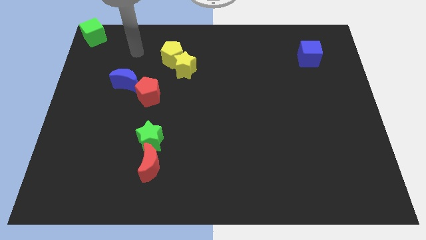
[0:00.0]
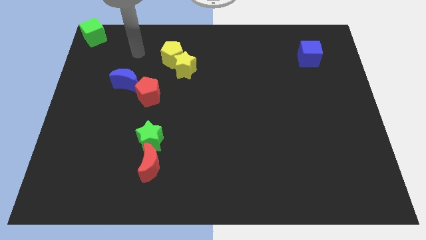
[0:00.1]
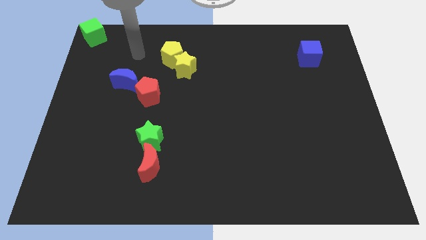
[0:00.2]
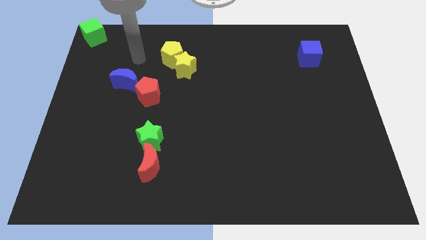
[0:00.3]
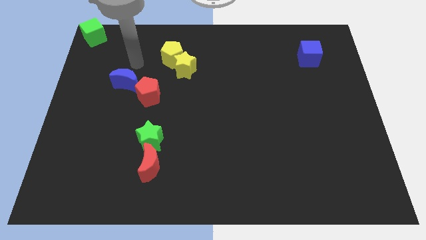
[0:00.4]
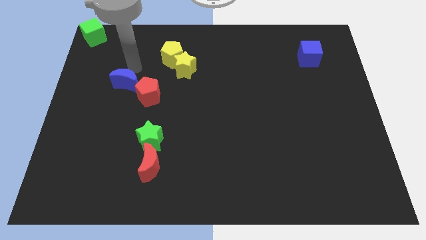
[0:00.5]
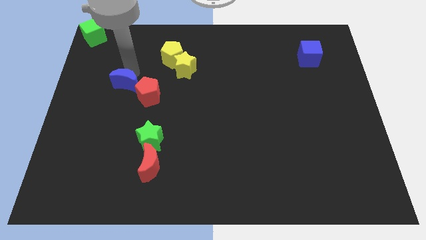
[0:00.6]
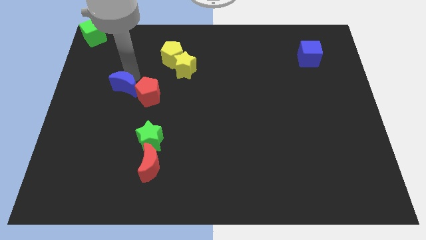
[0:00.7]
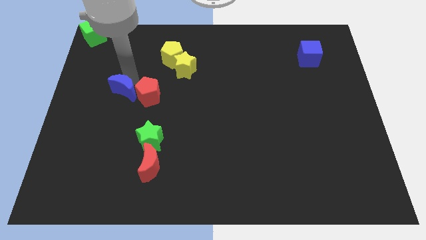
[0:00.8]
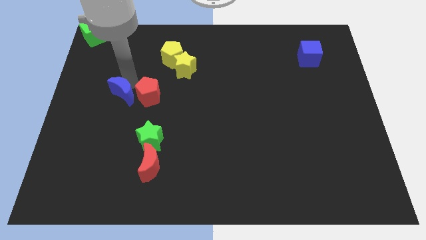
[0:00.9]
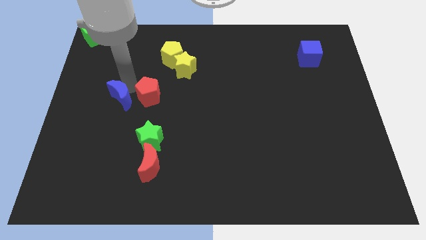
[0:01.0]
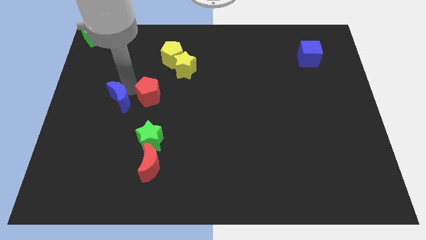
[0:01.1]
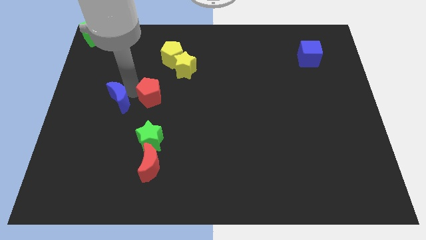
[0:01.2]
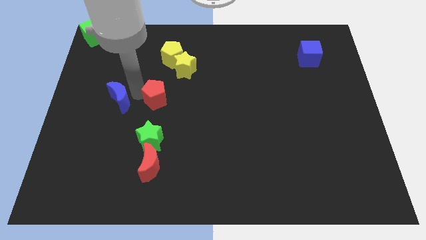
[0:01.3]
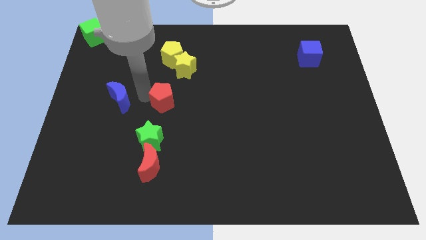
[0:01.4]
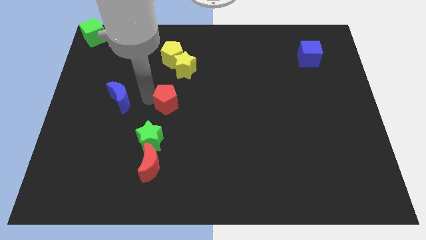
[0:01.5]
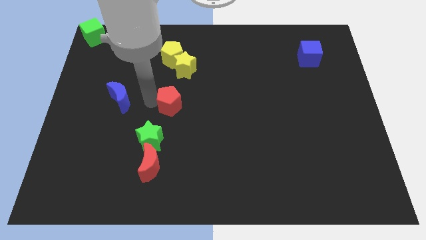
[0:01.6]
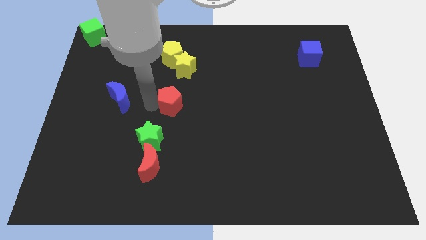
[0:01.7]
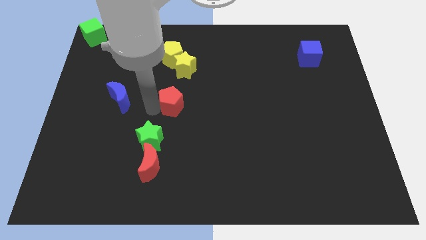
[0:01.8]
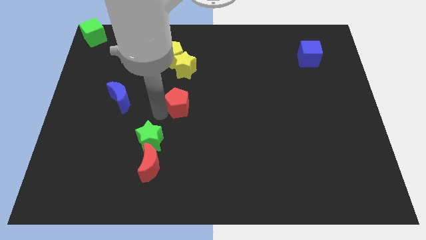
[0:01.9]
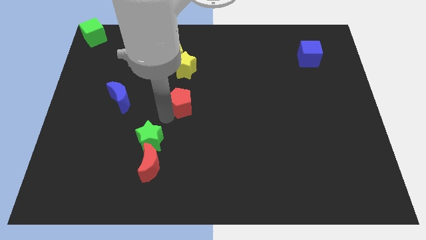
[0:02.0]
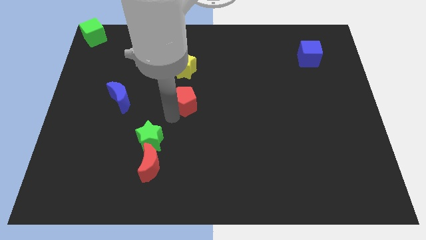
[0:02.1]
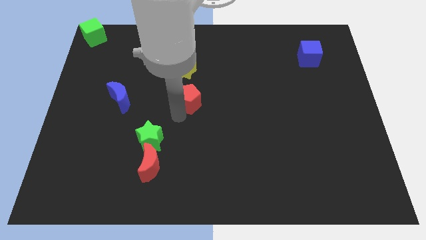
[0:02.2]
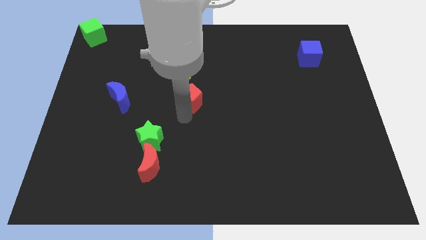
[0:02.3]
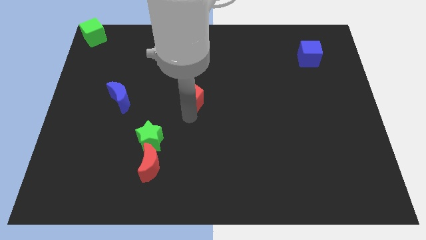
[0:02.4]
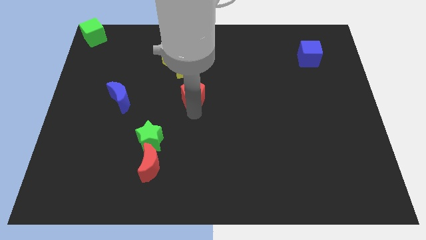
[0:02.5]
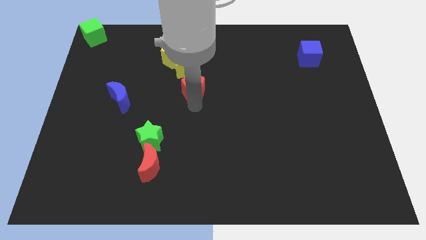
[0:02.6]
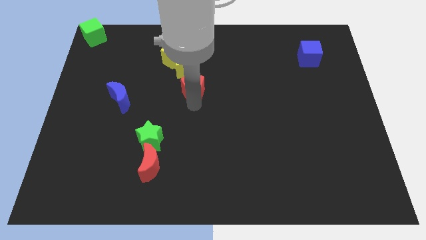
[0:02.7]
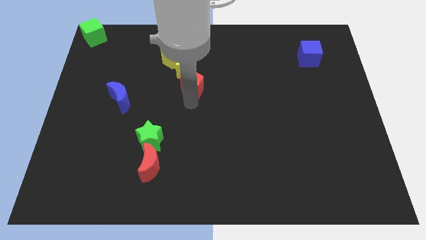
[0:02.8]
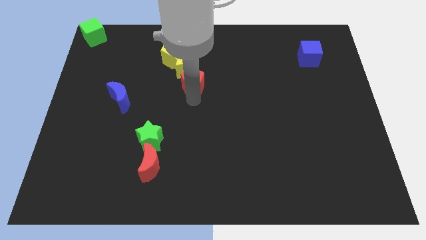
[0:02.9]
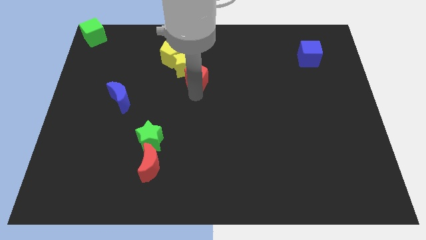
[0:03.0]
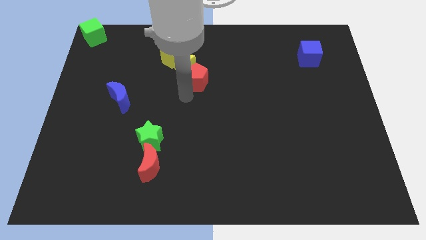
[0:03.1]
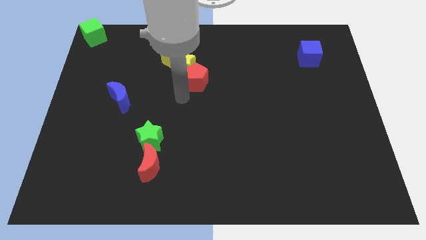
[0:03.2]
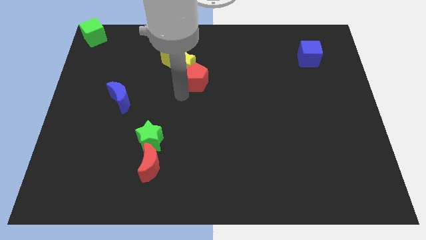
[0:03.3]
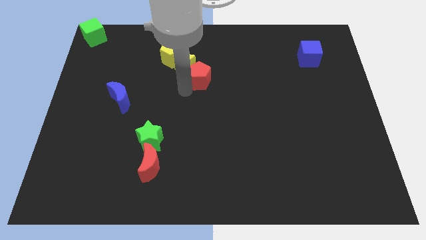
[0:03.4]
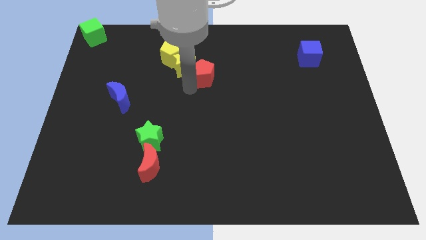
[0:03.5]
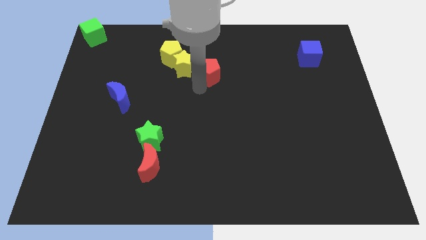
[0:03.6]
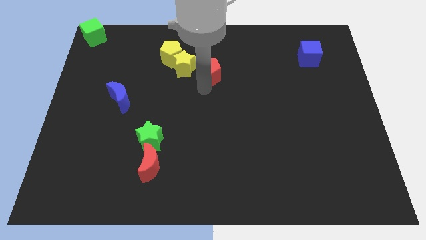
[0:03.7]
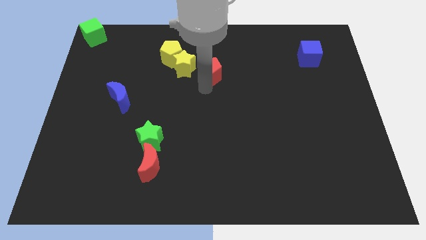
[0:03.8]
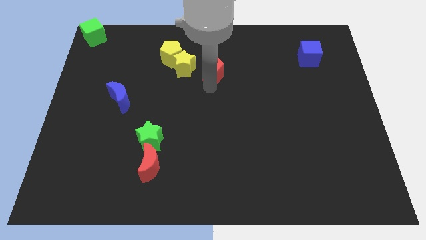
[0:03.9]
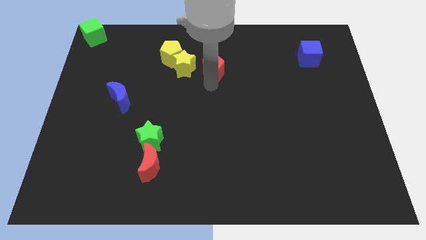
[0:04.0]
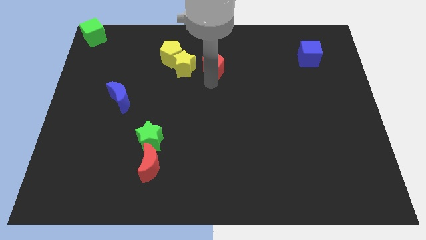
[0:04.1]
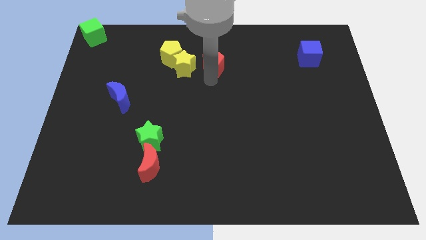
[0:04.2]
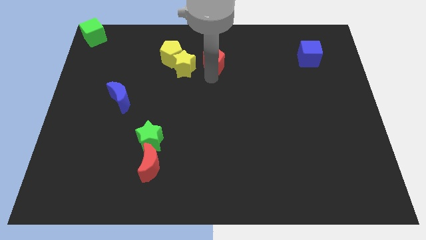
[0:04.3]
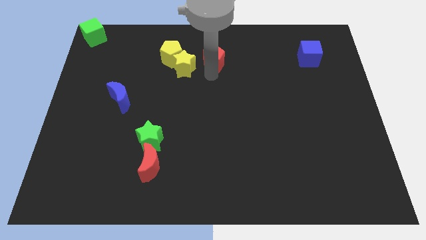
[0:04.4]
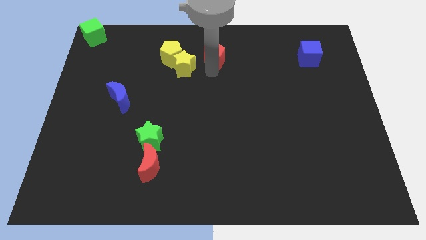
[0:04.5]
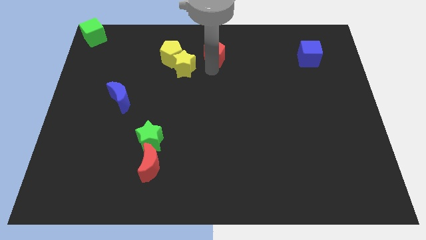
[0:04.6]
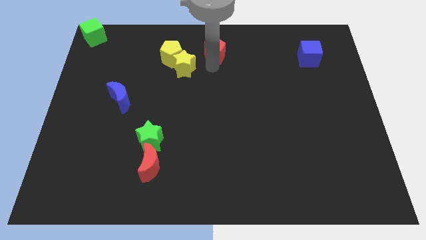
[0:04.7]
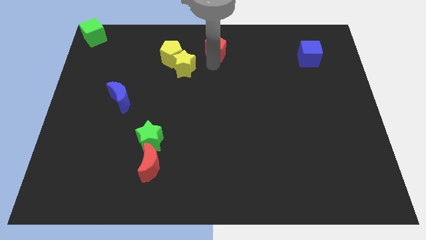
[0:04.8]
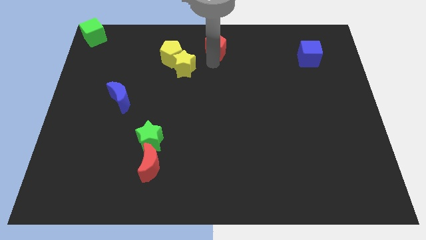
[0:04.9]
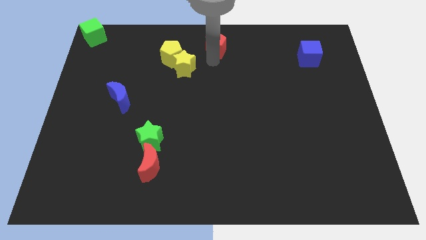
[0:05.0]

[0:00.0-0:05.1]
push the red pentagon away from the blue crescent

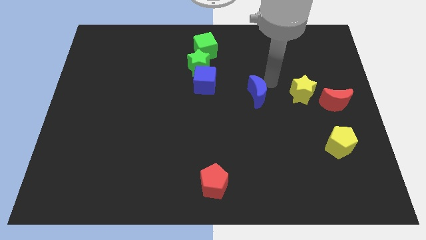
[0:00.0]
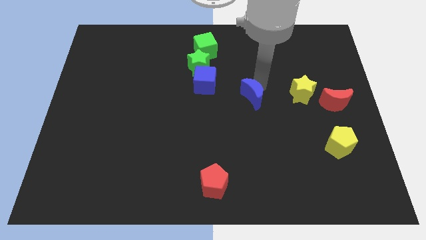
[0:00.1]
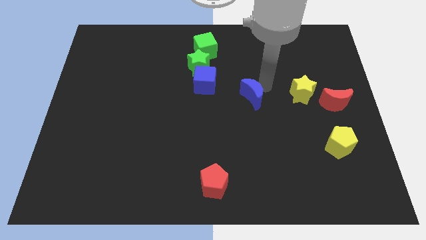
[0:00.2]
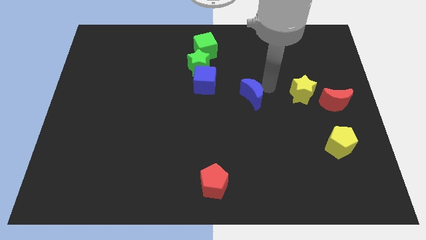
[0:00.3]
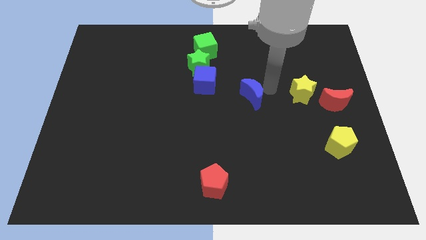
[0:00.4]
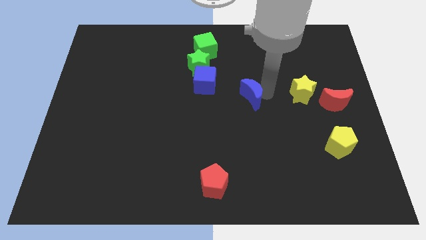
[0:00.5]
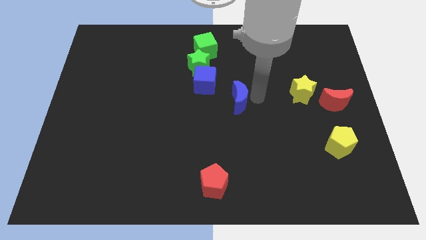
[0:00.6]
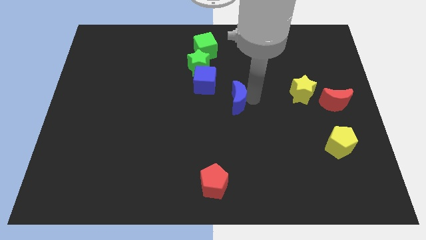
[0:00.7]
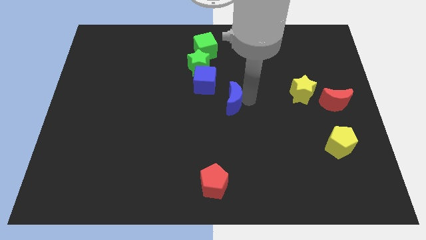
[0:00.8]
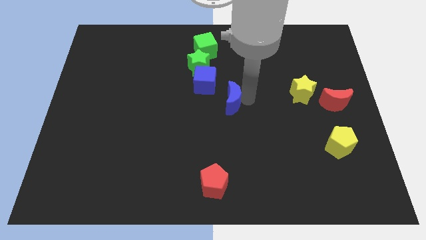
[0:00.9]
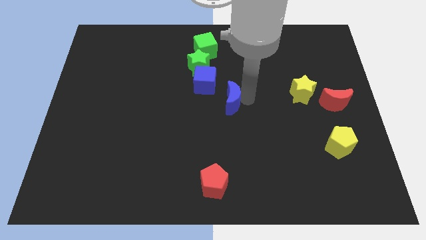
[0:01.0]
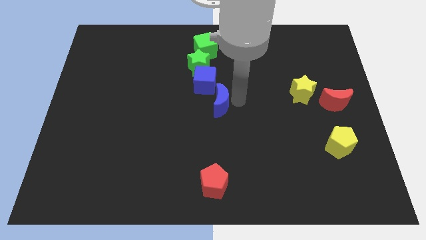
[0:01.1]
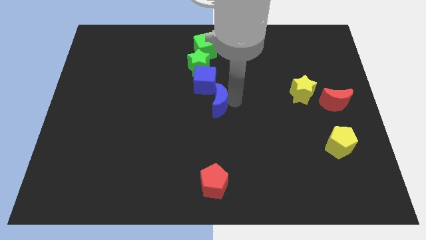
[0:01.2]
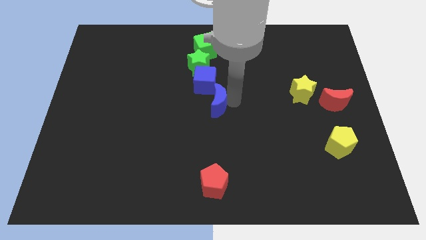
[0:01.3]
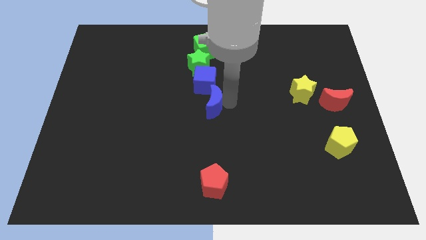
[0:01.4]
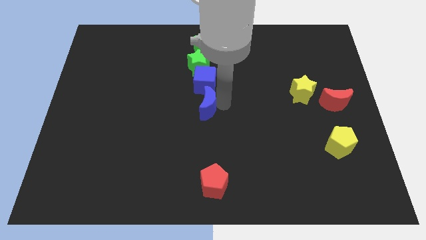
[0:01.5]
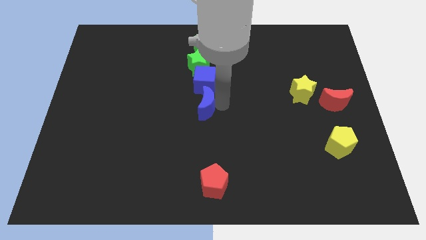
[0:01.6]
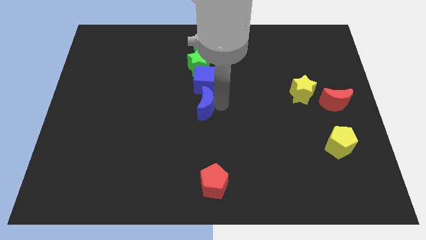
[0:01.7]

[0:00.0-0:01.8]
place the blue moon at the bottom of the blue cube

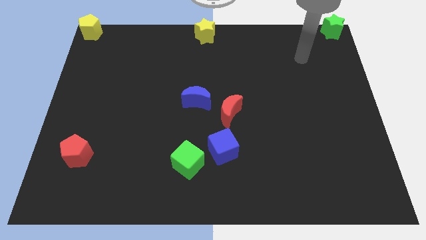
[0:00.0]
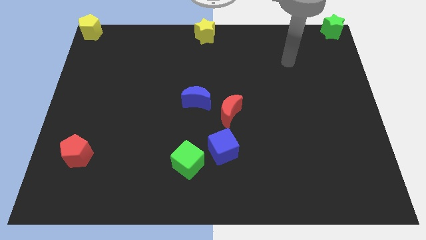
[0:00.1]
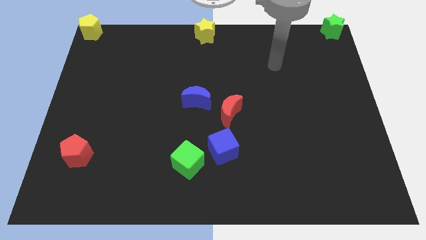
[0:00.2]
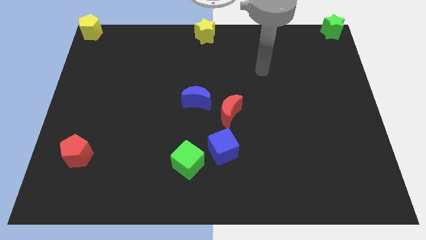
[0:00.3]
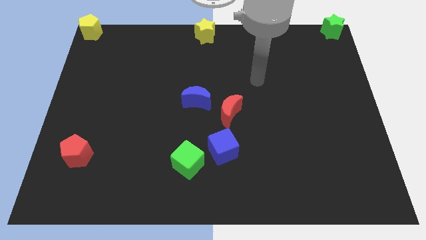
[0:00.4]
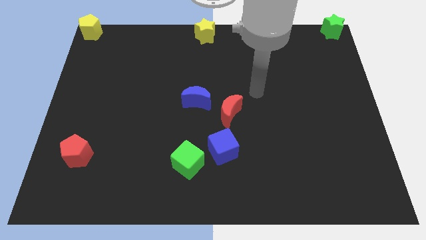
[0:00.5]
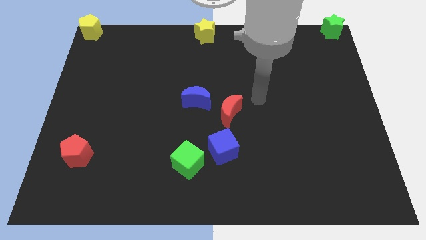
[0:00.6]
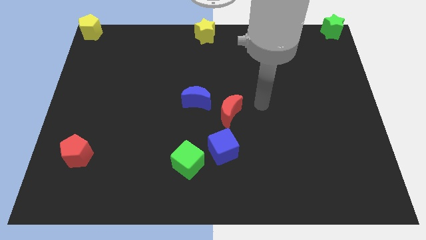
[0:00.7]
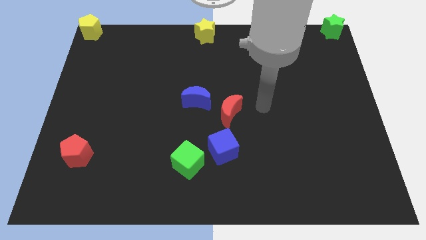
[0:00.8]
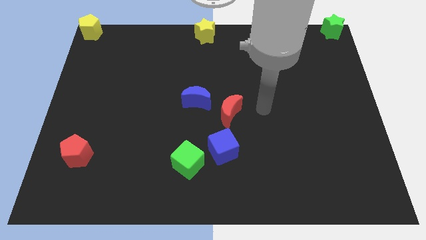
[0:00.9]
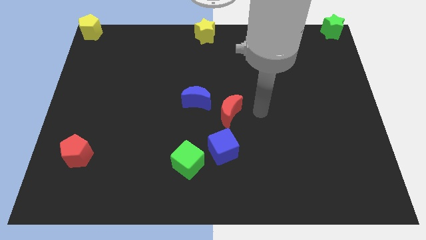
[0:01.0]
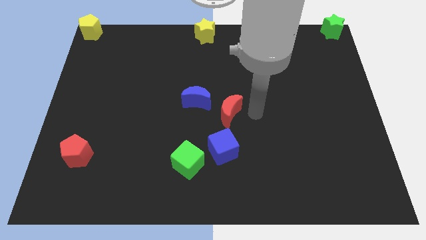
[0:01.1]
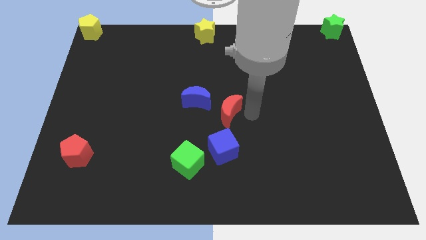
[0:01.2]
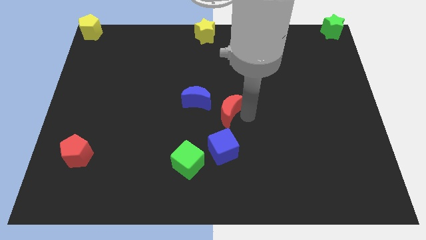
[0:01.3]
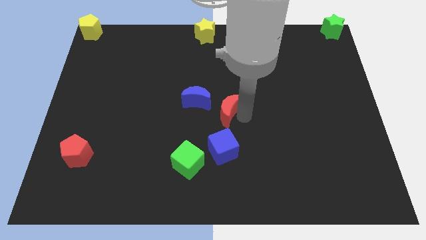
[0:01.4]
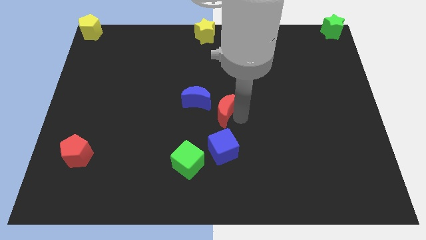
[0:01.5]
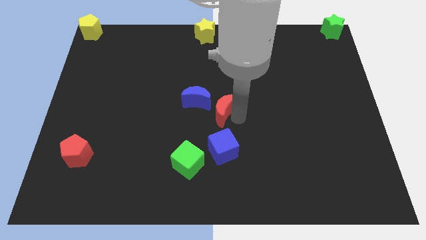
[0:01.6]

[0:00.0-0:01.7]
move your arm towards the red crescent

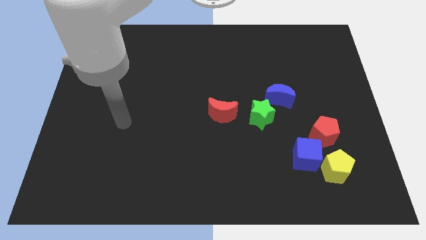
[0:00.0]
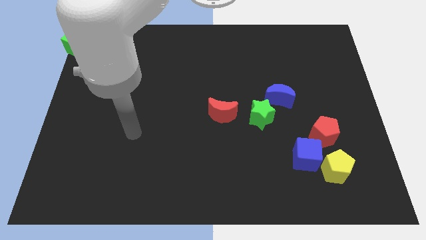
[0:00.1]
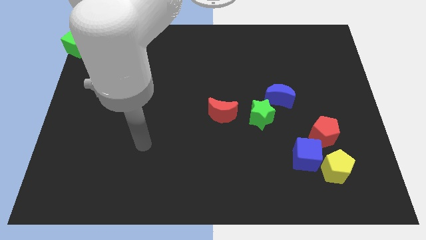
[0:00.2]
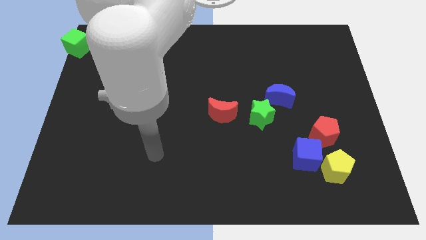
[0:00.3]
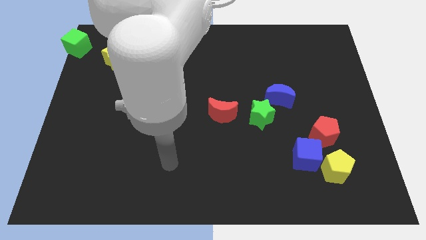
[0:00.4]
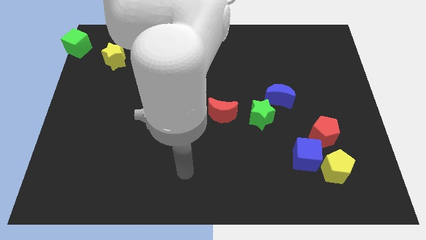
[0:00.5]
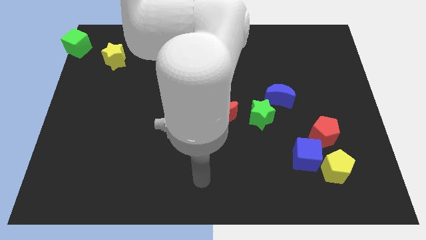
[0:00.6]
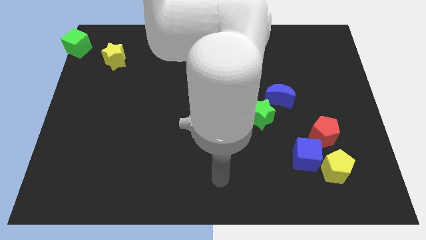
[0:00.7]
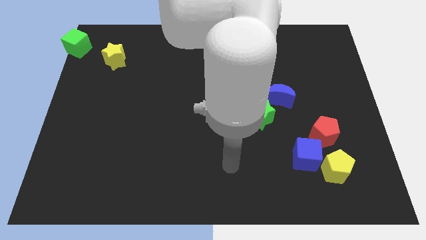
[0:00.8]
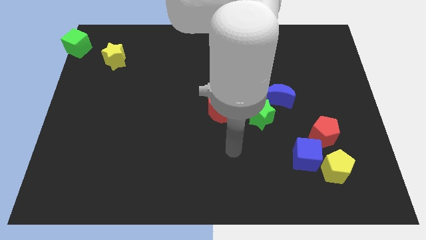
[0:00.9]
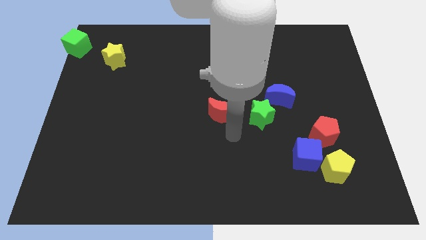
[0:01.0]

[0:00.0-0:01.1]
move the arm to the bottom of the red pentagon
